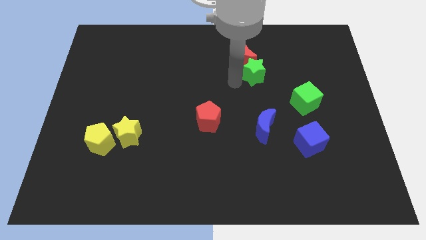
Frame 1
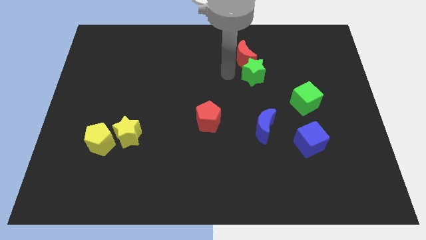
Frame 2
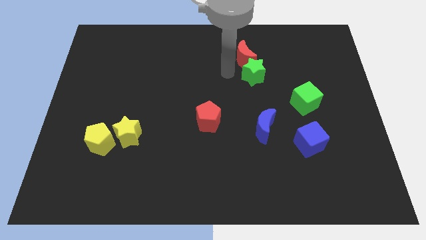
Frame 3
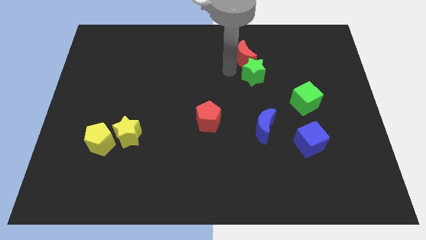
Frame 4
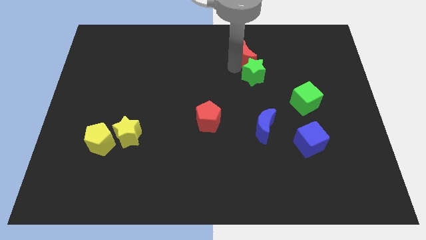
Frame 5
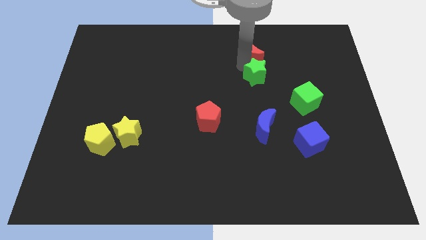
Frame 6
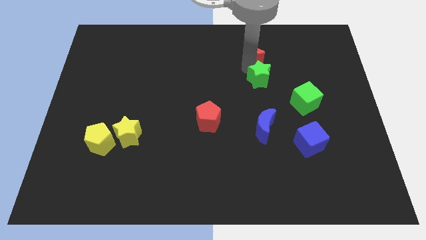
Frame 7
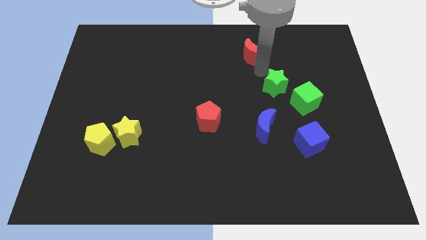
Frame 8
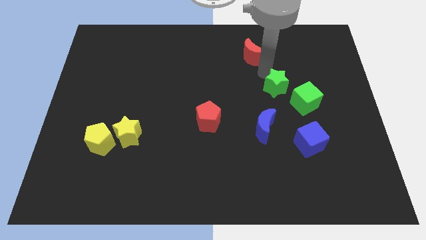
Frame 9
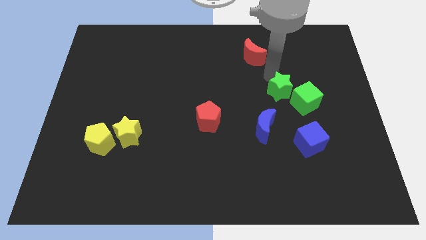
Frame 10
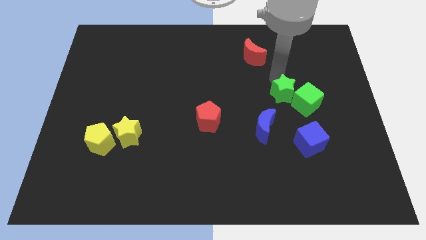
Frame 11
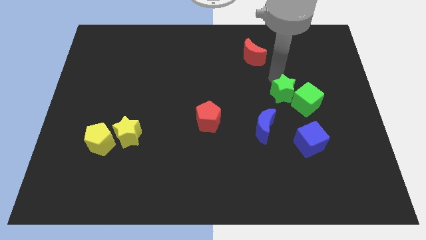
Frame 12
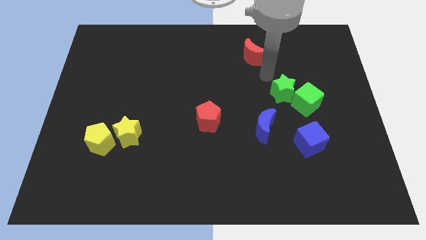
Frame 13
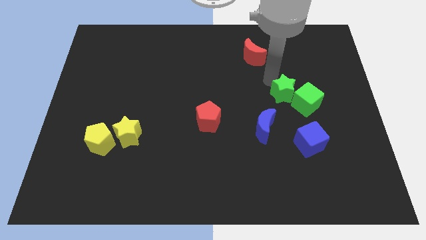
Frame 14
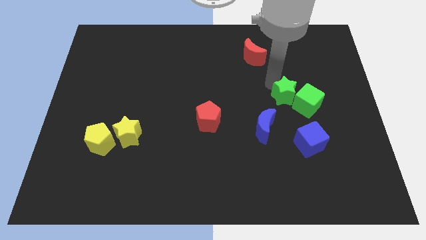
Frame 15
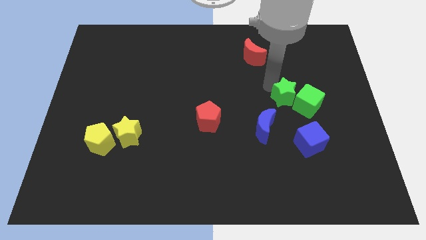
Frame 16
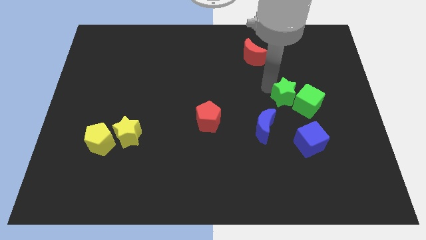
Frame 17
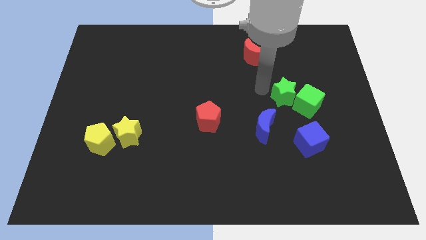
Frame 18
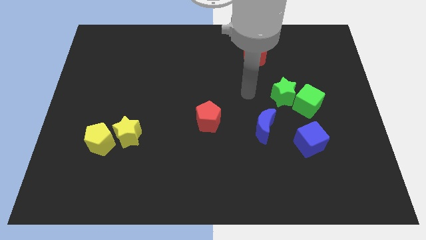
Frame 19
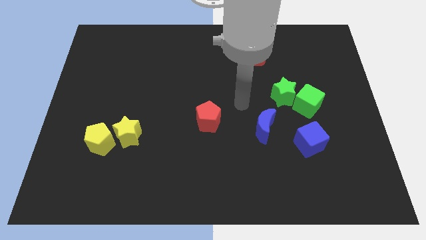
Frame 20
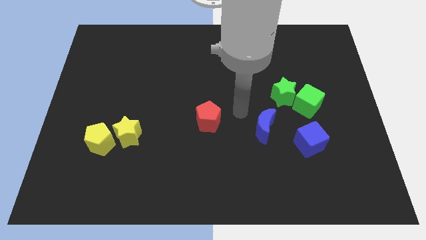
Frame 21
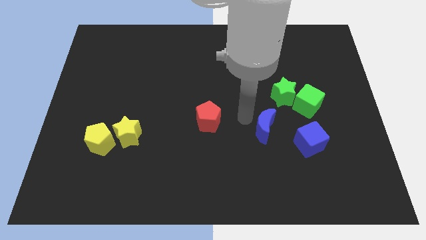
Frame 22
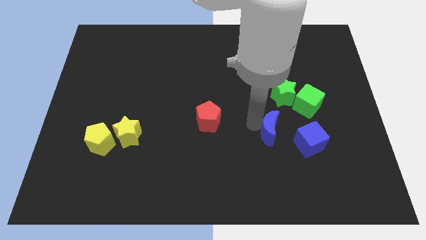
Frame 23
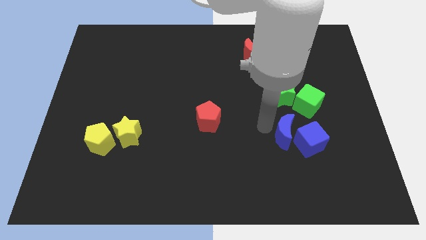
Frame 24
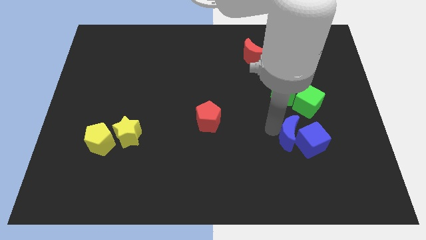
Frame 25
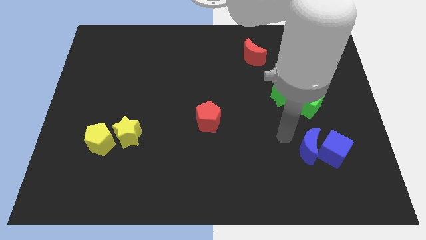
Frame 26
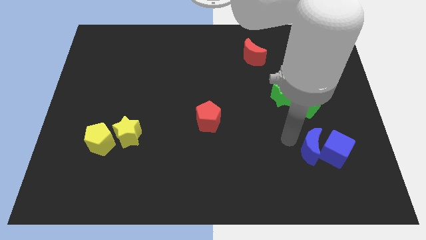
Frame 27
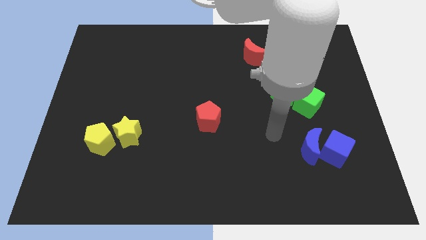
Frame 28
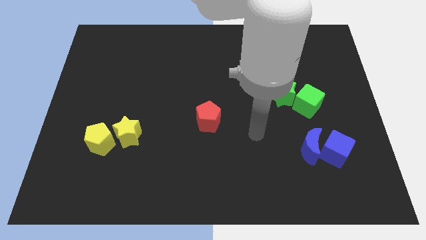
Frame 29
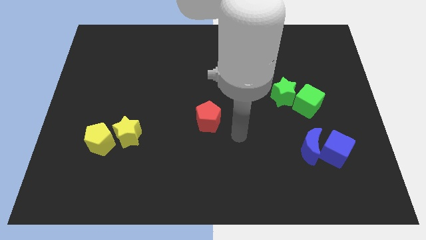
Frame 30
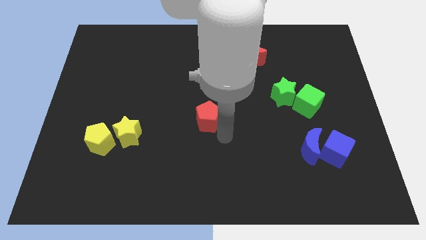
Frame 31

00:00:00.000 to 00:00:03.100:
move the green star to the left of the green cube

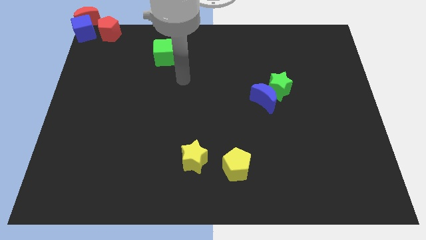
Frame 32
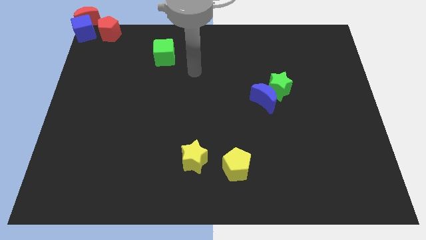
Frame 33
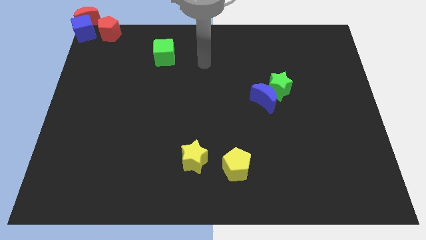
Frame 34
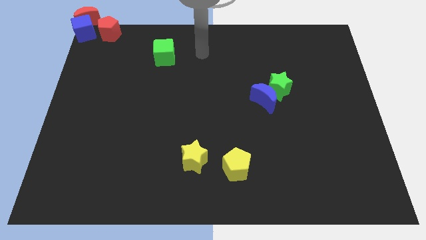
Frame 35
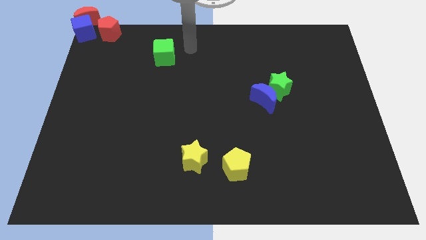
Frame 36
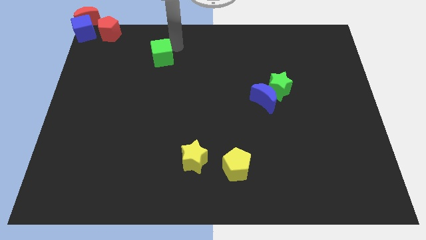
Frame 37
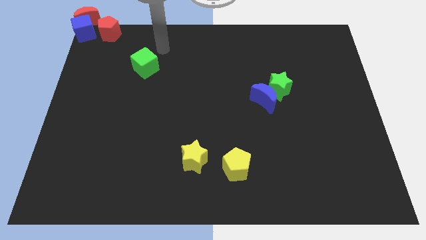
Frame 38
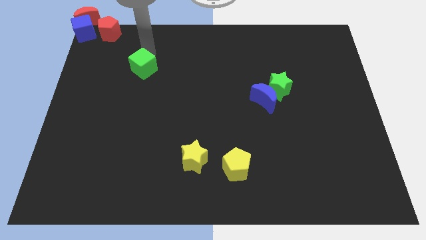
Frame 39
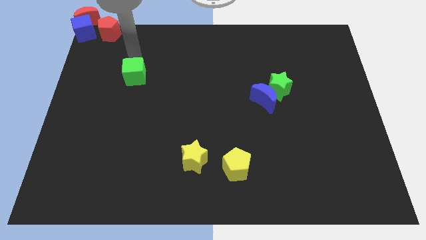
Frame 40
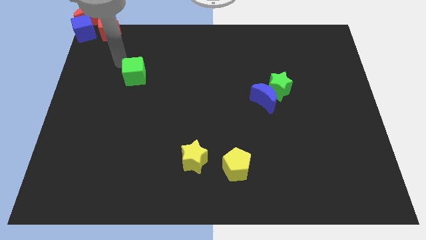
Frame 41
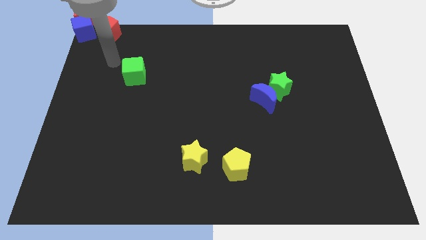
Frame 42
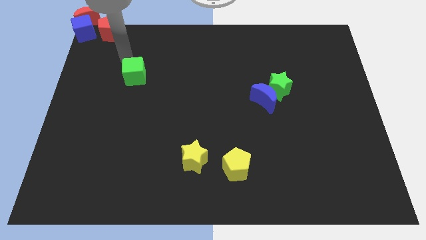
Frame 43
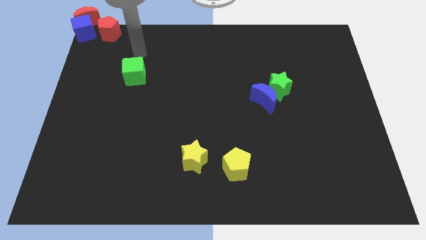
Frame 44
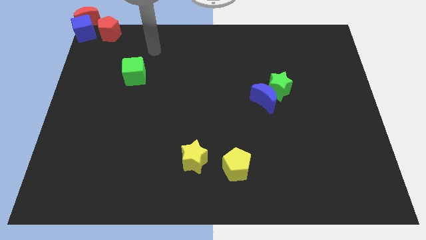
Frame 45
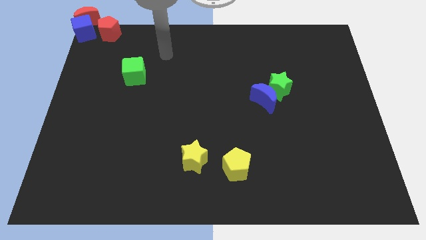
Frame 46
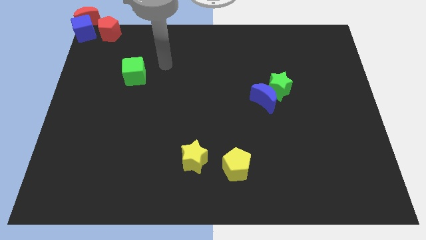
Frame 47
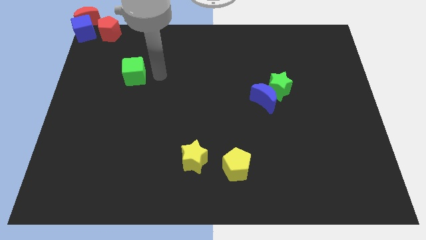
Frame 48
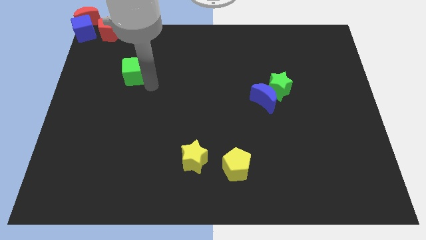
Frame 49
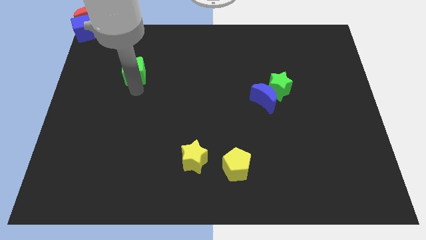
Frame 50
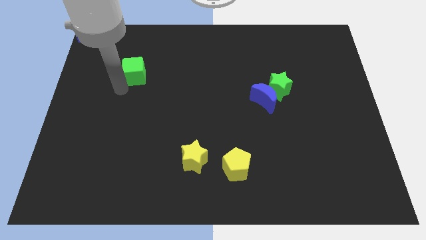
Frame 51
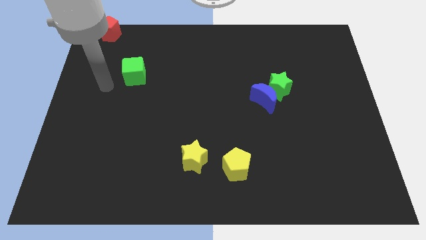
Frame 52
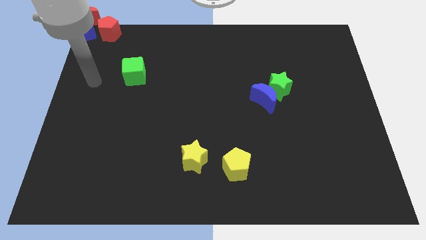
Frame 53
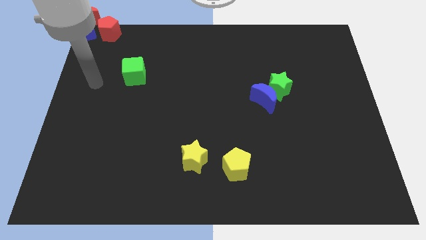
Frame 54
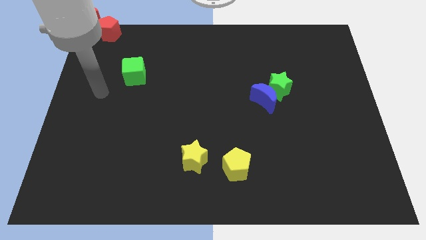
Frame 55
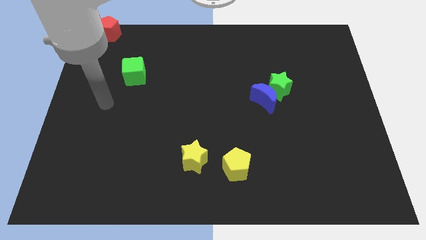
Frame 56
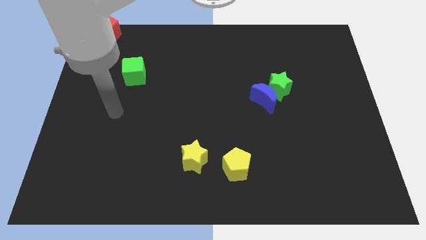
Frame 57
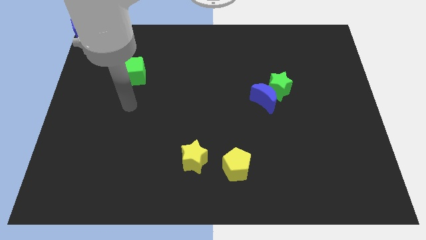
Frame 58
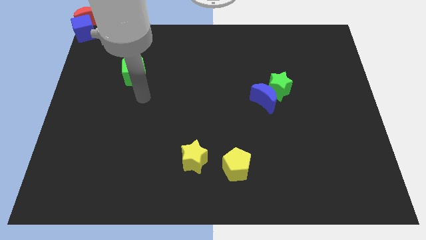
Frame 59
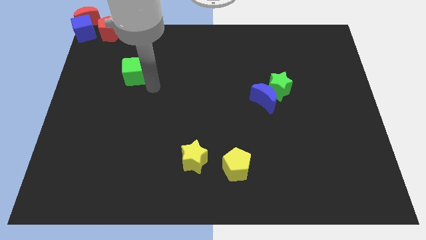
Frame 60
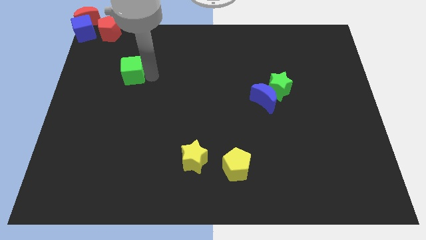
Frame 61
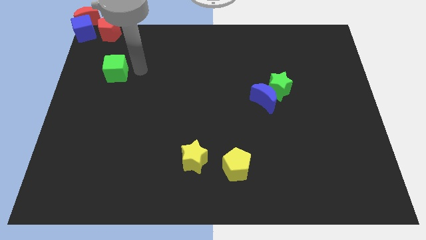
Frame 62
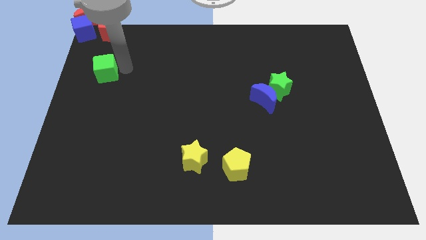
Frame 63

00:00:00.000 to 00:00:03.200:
slightly move the green cube towards the left side of the board

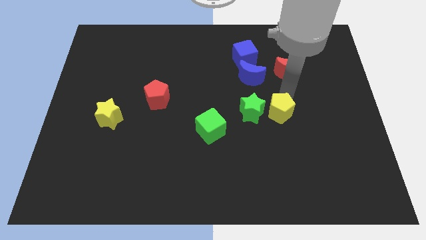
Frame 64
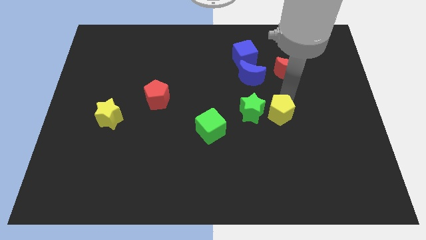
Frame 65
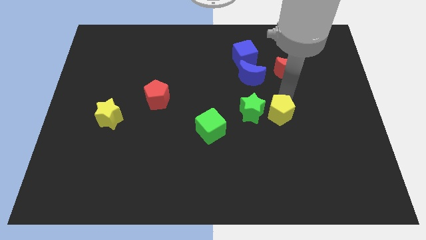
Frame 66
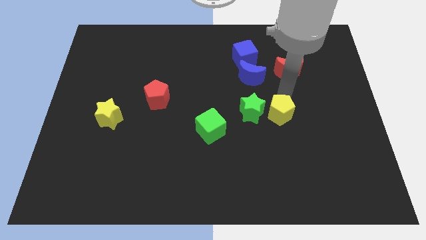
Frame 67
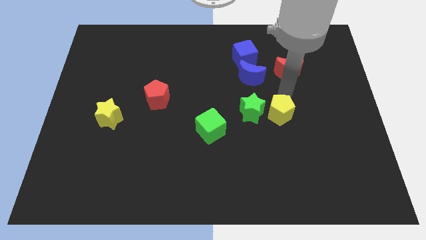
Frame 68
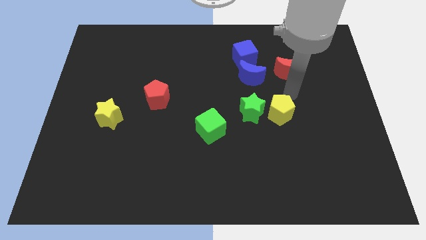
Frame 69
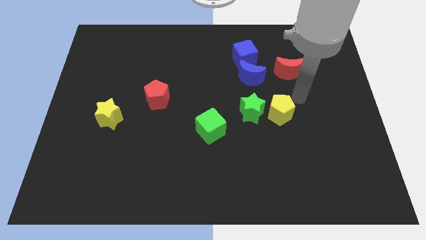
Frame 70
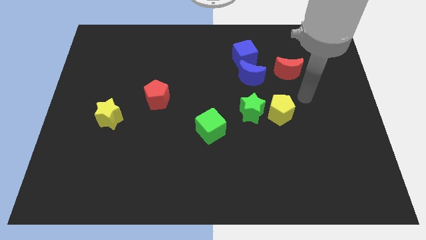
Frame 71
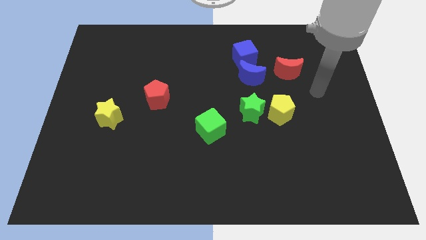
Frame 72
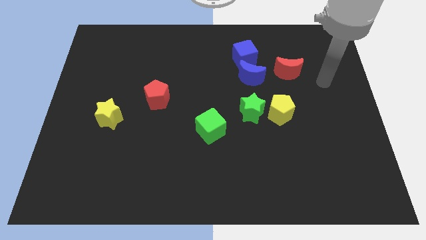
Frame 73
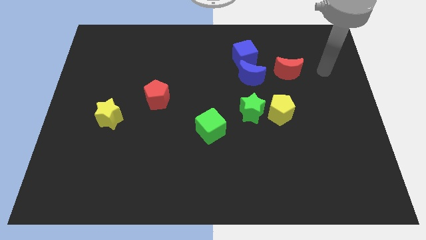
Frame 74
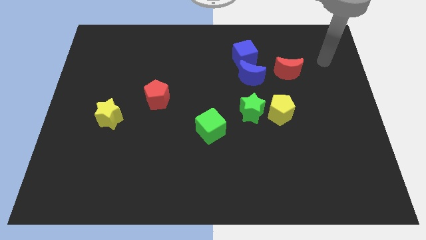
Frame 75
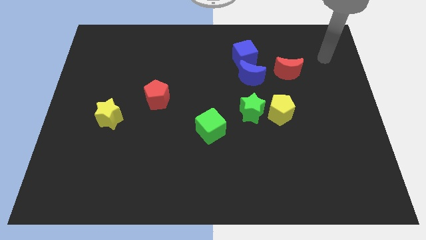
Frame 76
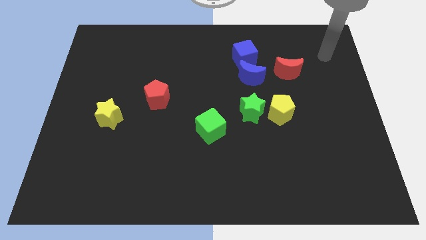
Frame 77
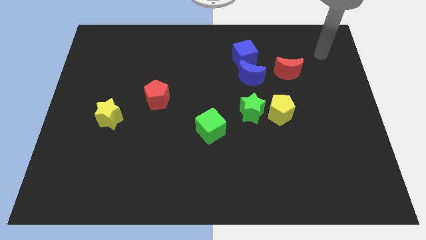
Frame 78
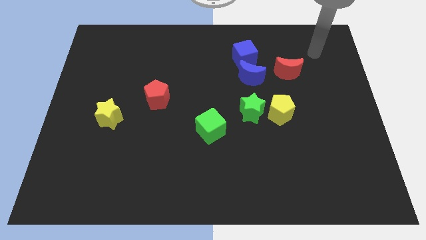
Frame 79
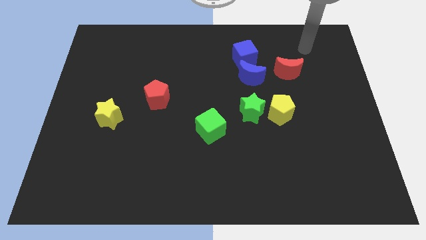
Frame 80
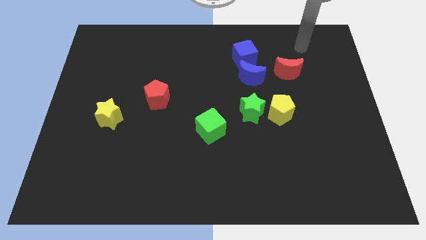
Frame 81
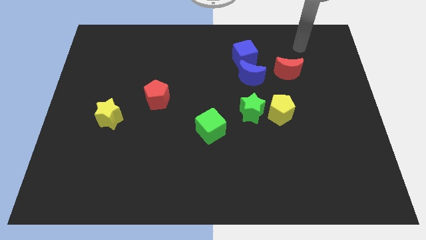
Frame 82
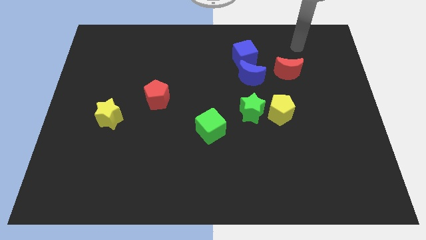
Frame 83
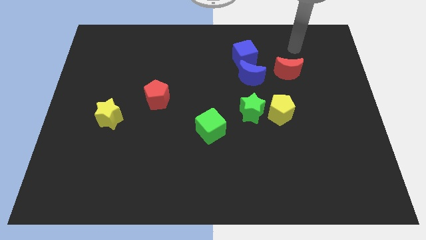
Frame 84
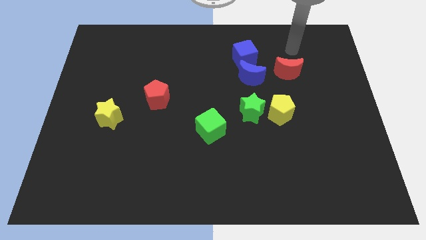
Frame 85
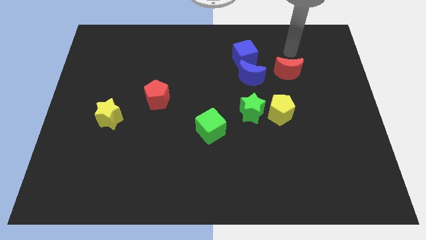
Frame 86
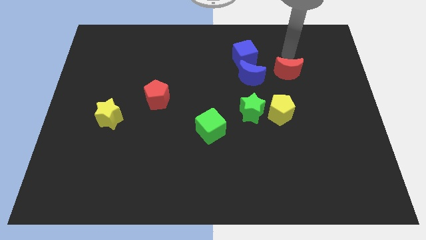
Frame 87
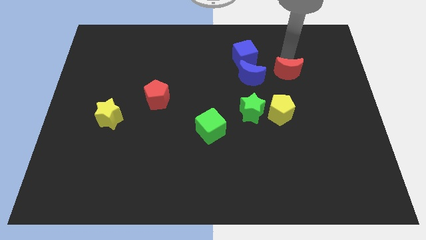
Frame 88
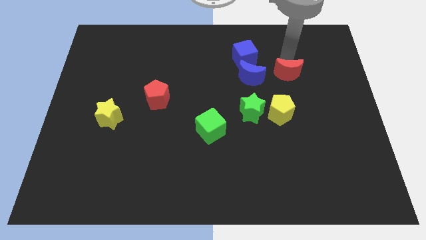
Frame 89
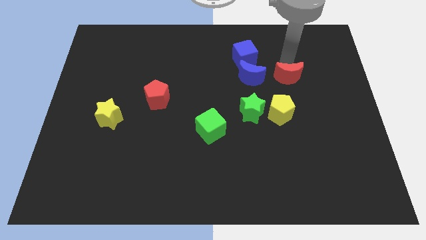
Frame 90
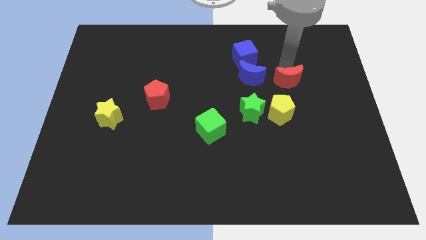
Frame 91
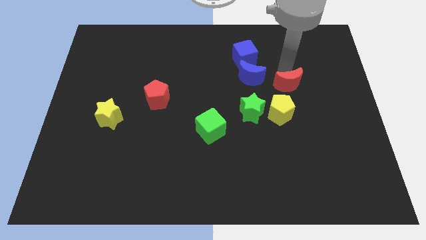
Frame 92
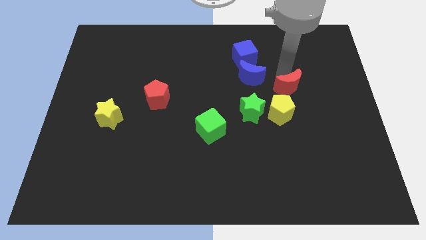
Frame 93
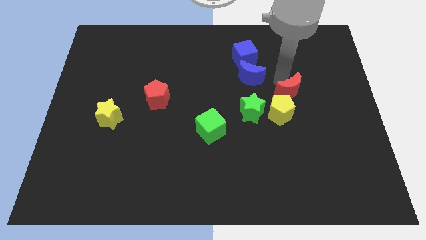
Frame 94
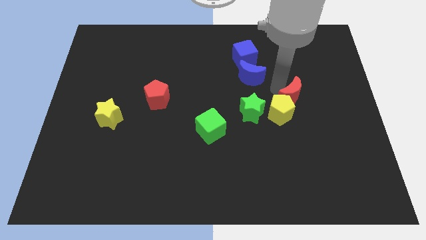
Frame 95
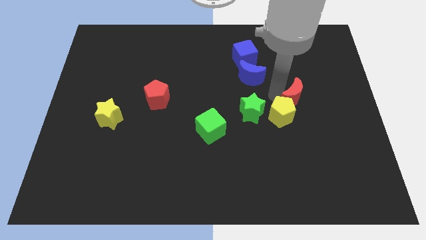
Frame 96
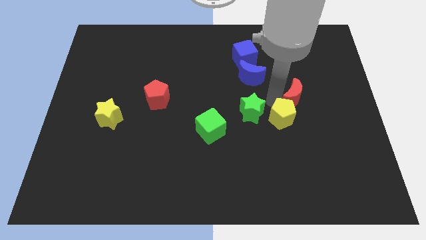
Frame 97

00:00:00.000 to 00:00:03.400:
slide red moon to the top side of the yellow pentagon
